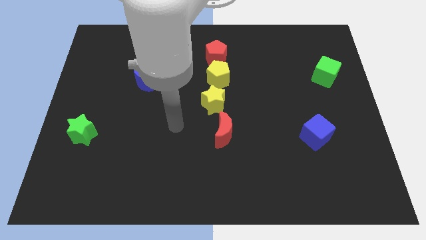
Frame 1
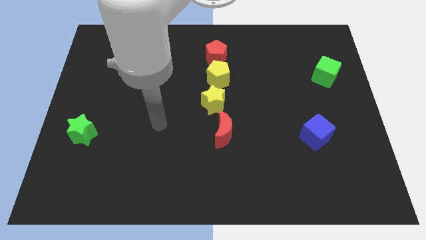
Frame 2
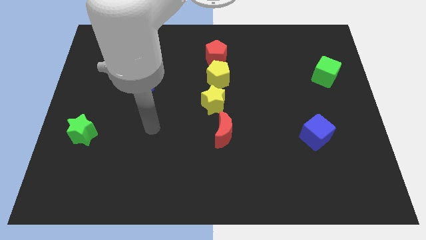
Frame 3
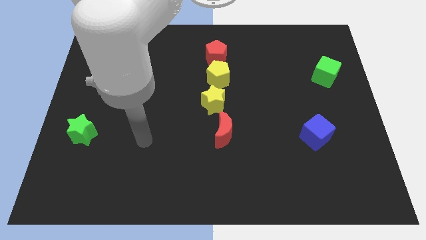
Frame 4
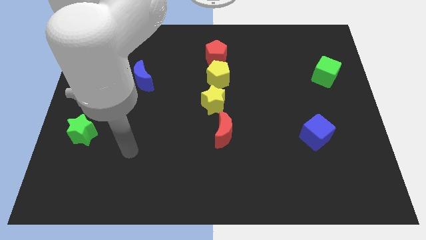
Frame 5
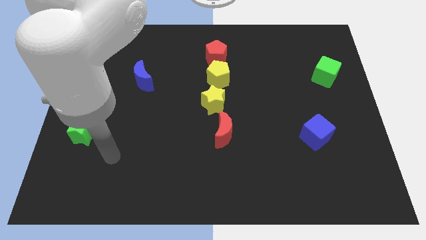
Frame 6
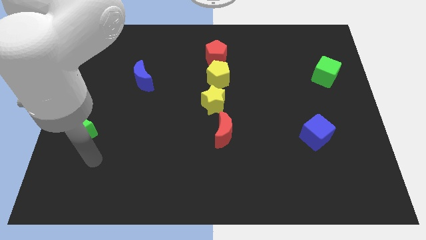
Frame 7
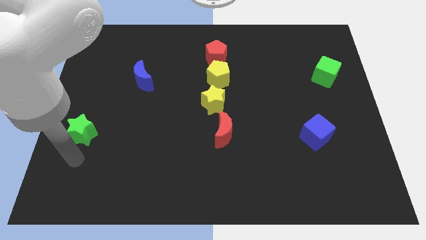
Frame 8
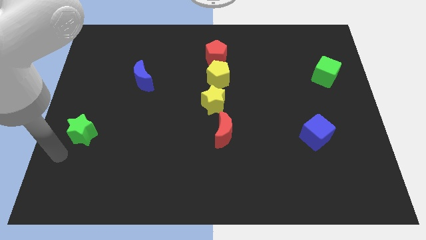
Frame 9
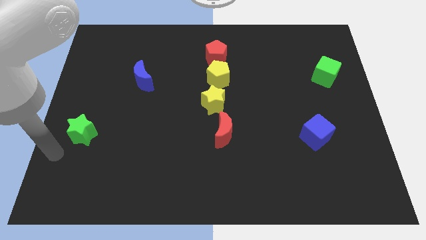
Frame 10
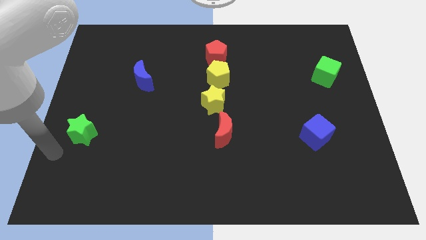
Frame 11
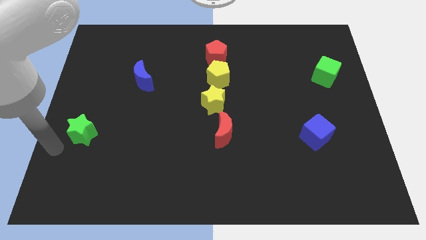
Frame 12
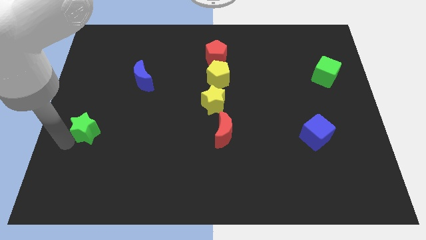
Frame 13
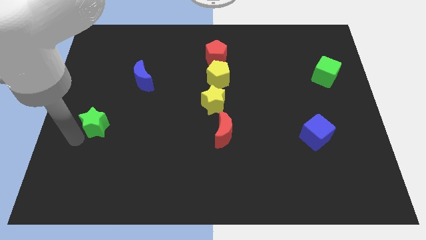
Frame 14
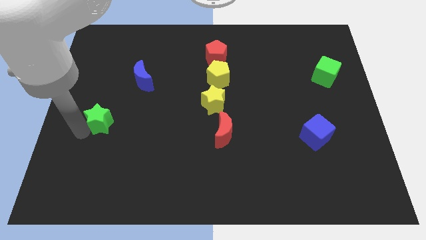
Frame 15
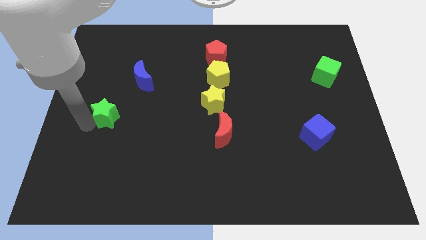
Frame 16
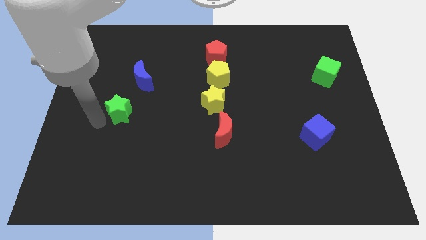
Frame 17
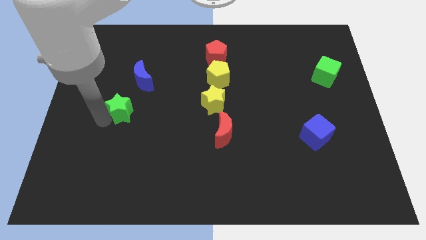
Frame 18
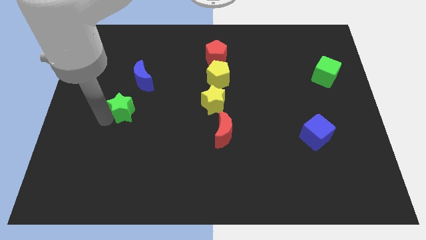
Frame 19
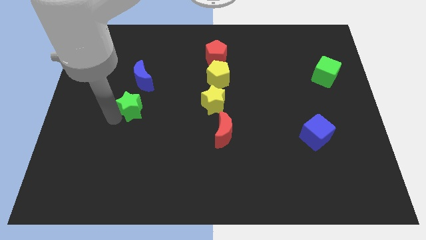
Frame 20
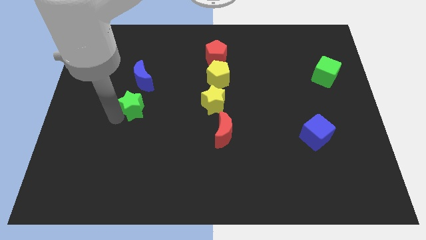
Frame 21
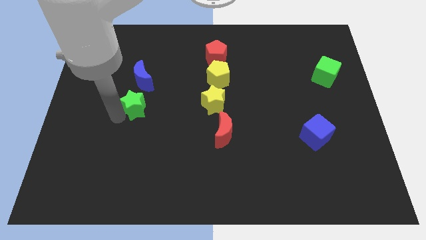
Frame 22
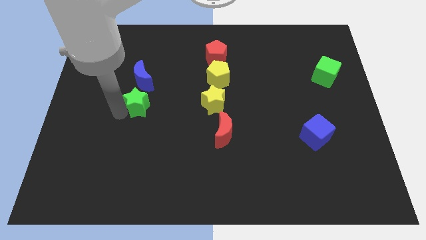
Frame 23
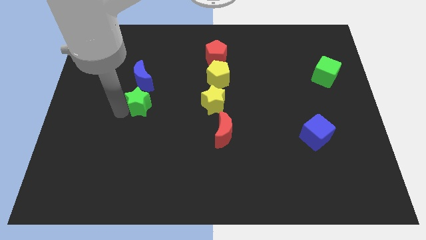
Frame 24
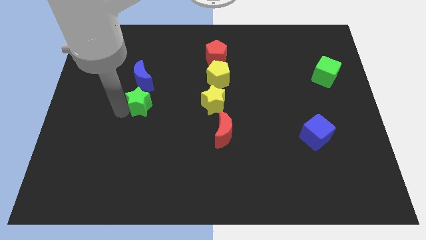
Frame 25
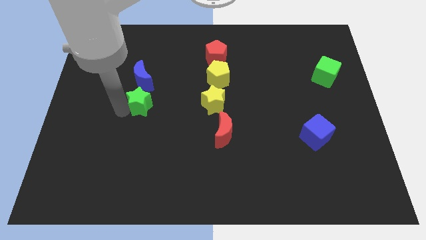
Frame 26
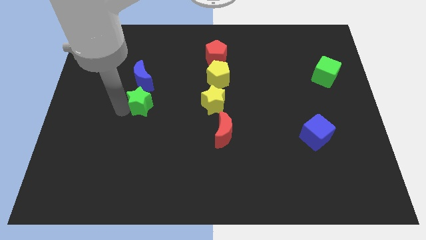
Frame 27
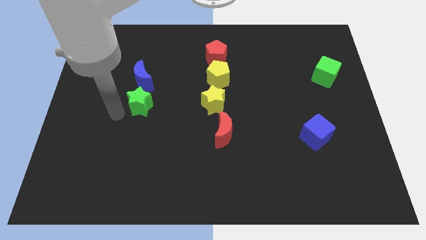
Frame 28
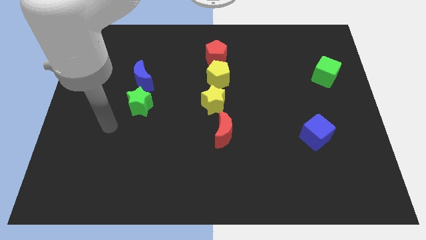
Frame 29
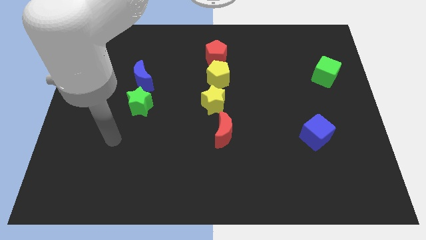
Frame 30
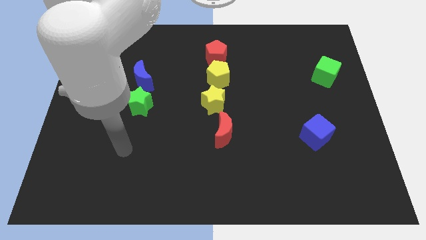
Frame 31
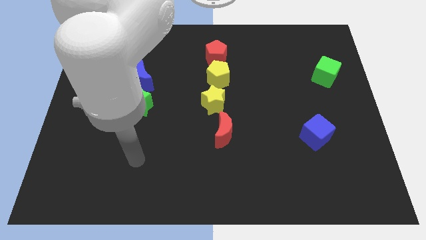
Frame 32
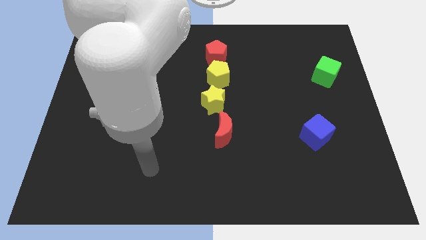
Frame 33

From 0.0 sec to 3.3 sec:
push the green star horizontally to the left side of the yellow star

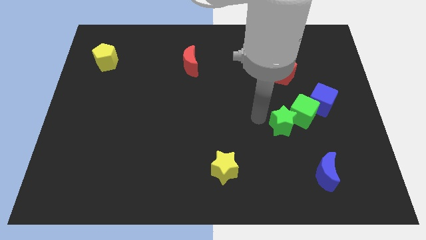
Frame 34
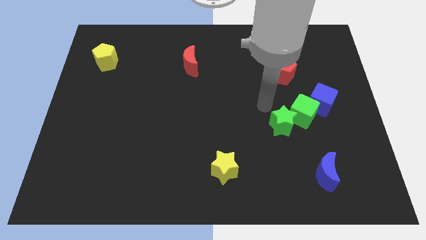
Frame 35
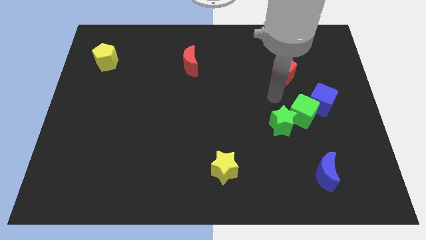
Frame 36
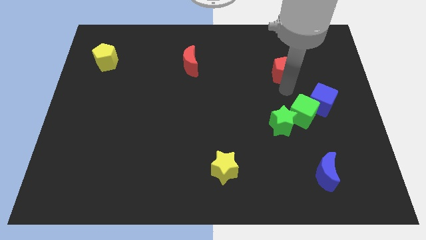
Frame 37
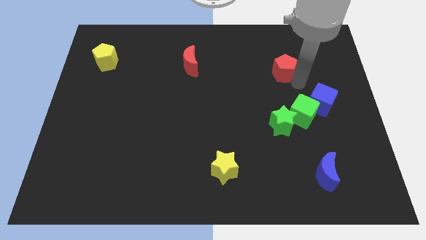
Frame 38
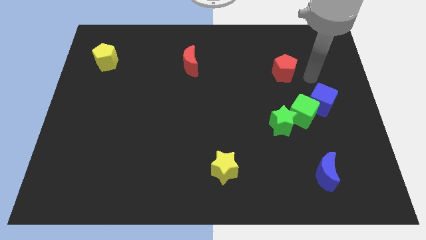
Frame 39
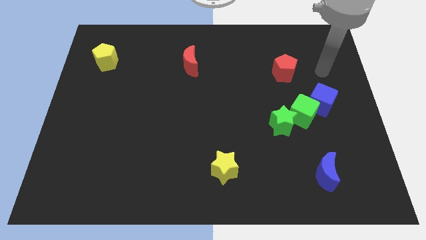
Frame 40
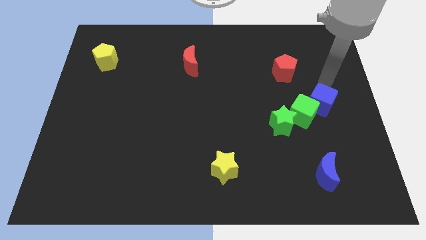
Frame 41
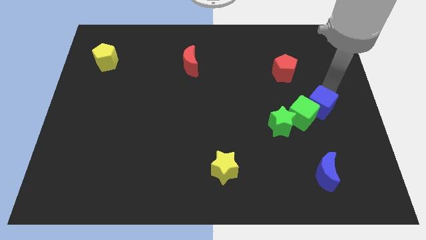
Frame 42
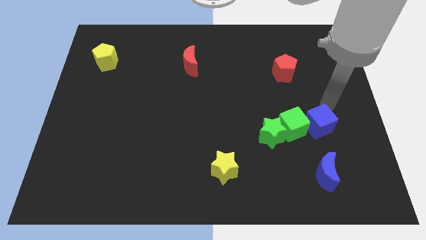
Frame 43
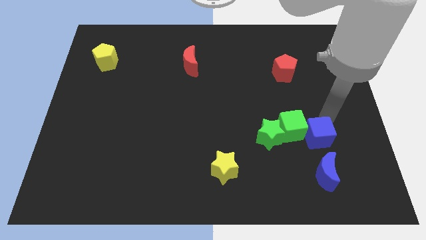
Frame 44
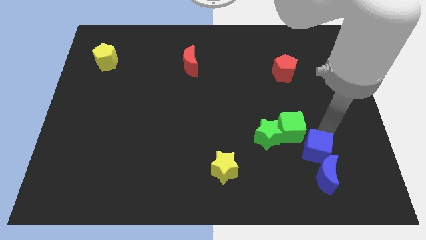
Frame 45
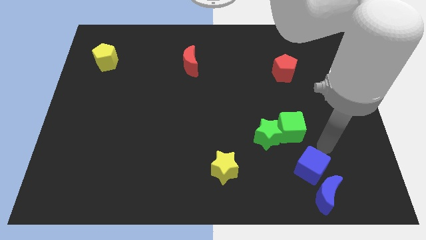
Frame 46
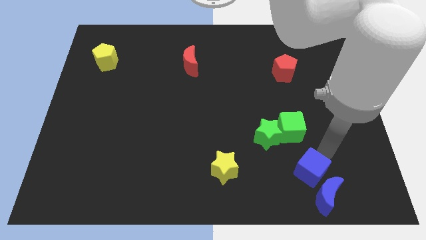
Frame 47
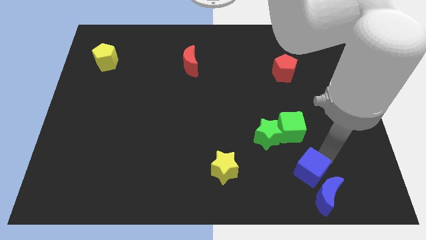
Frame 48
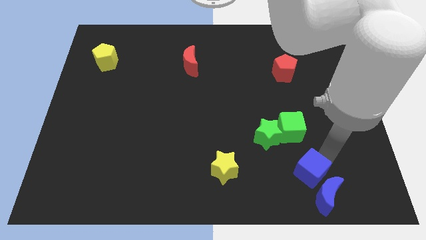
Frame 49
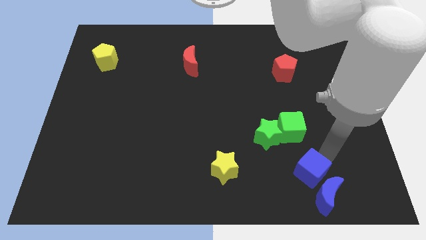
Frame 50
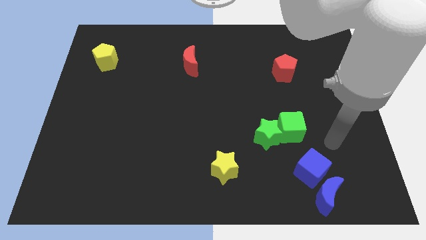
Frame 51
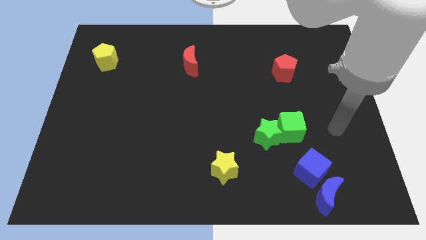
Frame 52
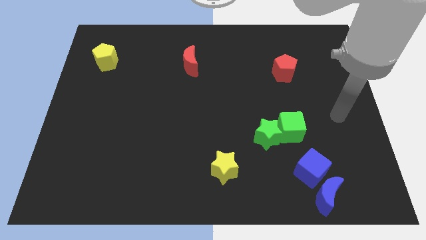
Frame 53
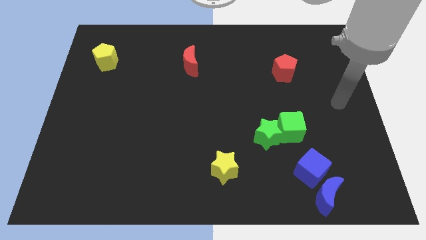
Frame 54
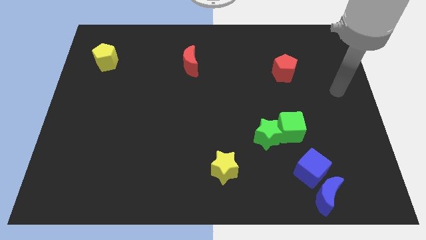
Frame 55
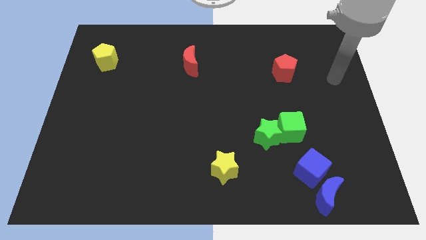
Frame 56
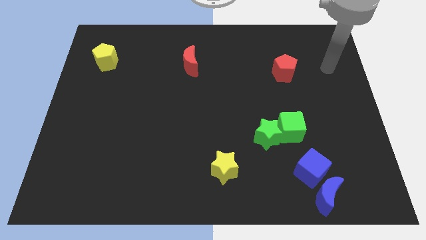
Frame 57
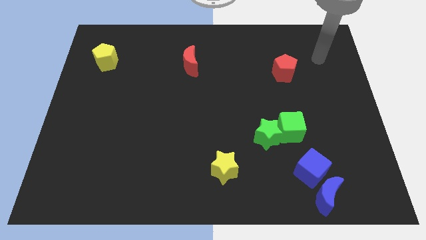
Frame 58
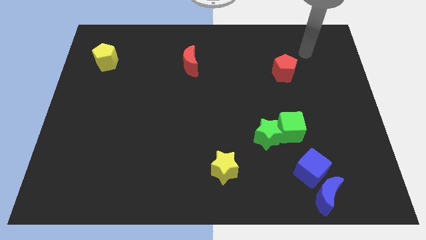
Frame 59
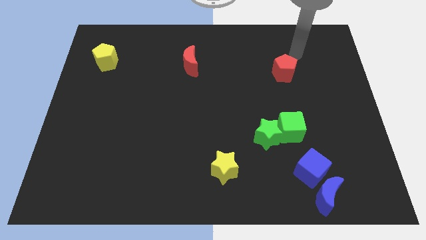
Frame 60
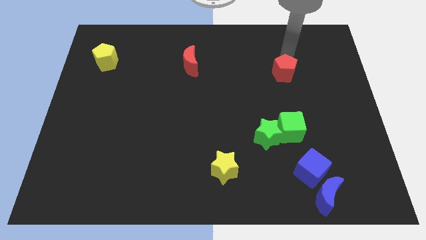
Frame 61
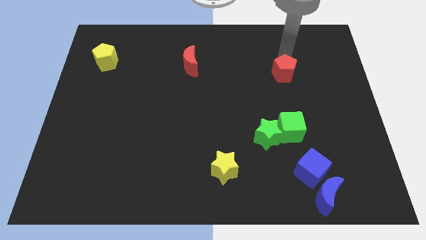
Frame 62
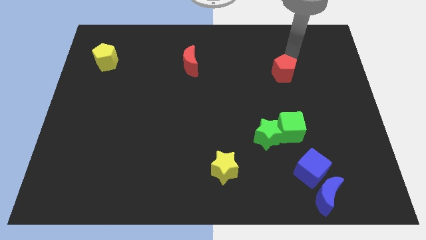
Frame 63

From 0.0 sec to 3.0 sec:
push the blue cube into the blue moon

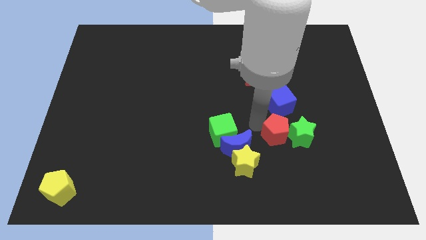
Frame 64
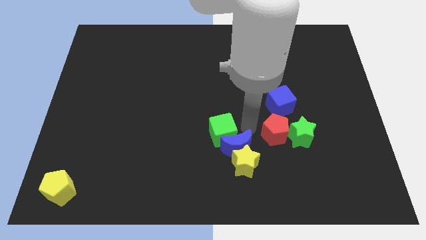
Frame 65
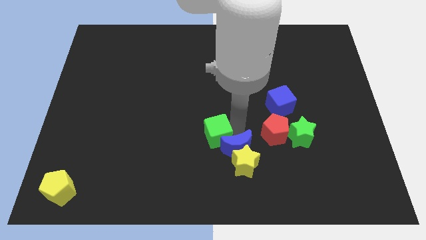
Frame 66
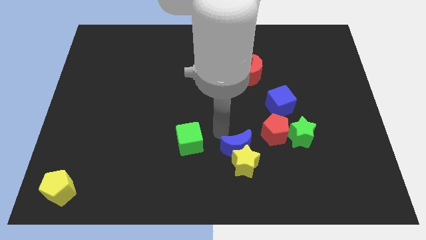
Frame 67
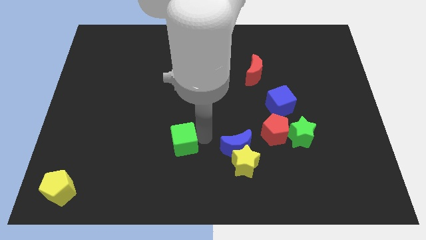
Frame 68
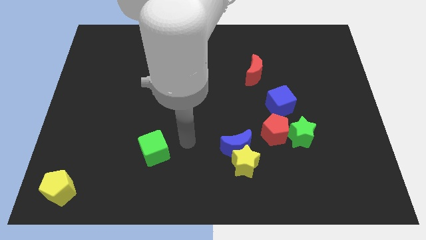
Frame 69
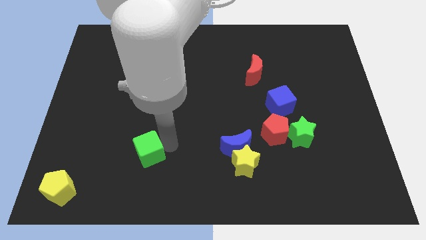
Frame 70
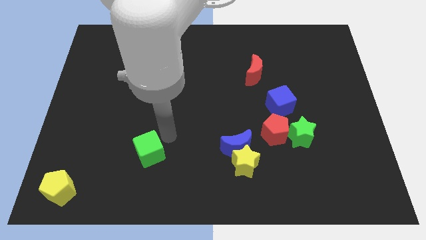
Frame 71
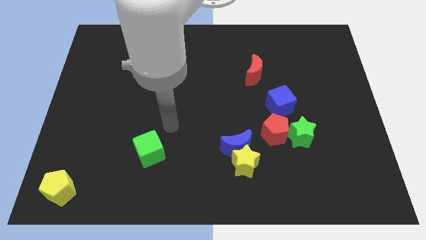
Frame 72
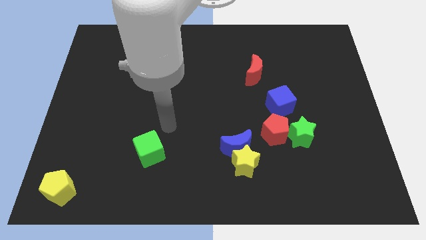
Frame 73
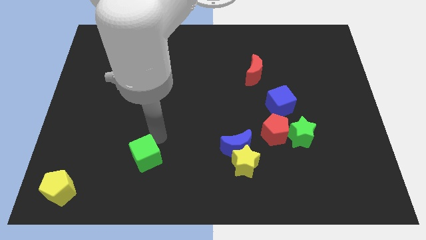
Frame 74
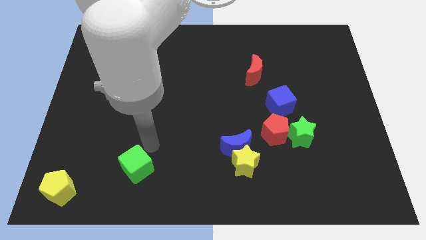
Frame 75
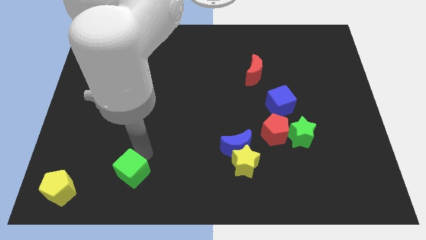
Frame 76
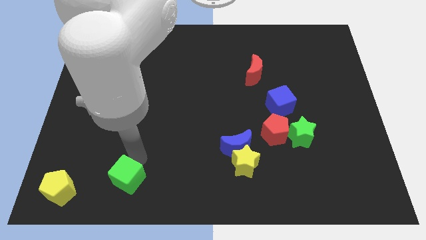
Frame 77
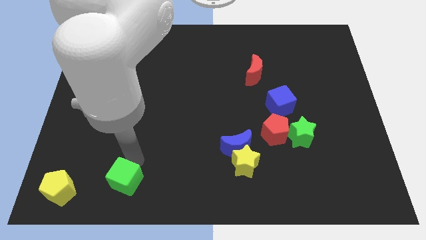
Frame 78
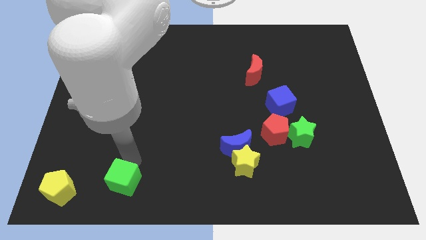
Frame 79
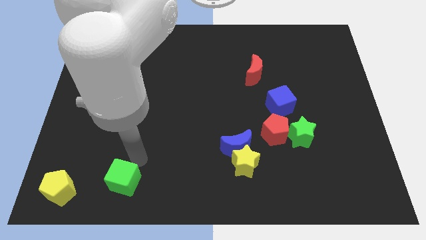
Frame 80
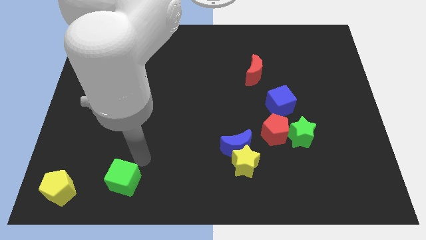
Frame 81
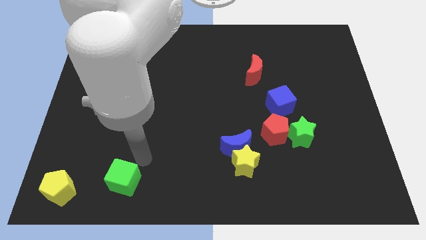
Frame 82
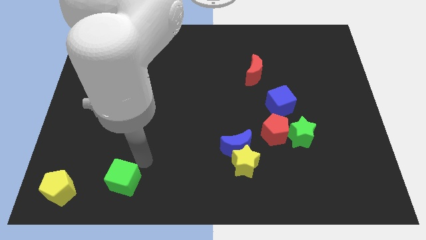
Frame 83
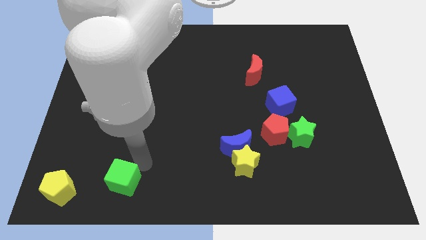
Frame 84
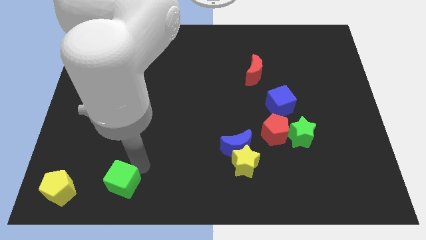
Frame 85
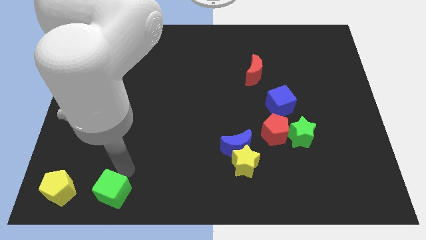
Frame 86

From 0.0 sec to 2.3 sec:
move green cube right of yellow pentagon

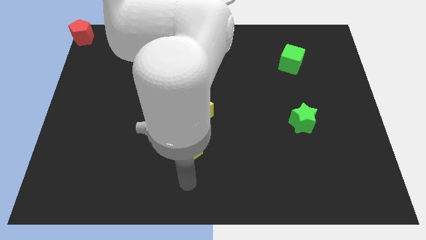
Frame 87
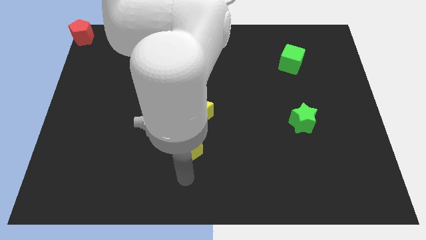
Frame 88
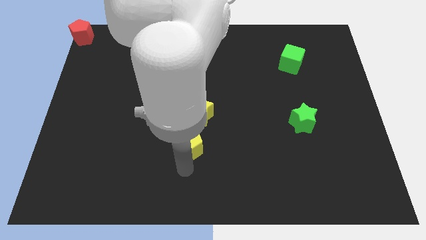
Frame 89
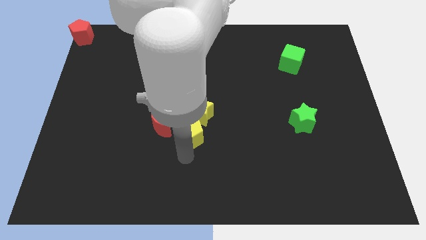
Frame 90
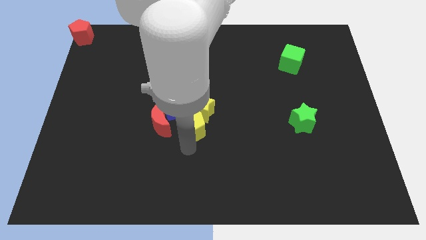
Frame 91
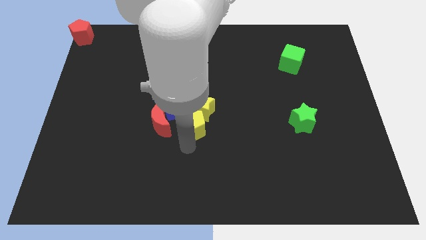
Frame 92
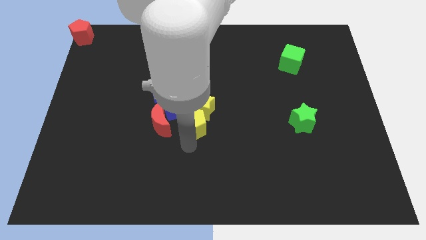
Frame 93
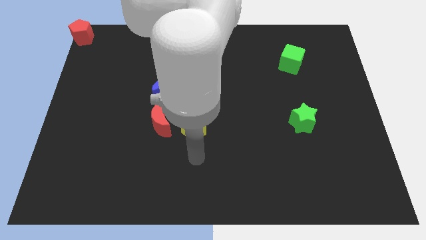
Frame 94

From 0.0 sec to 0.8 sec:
push the yellow pentagon into the yellow star
